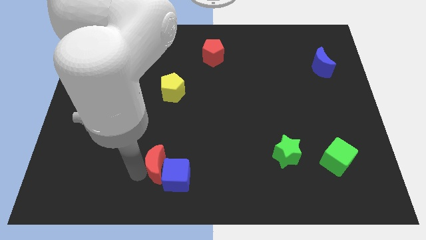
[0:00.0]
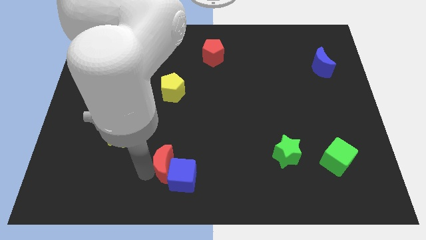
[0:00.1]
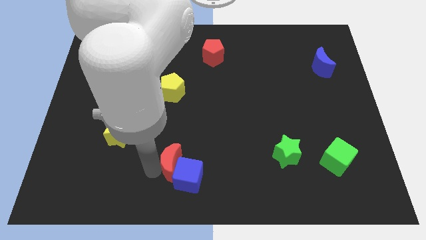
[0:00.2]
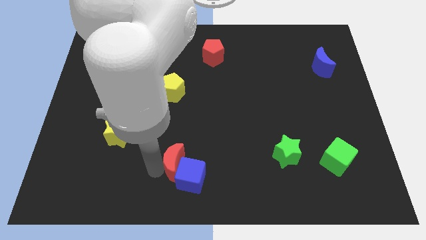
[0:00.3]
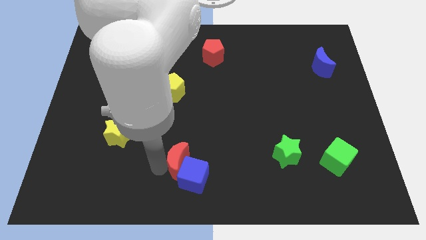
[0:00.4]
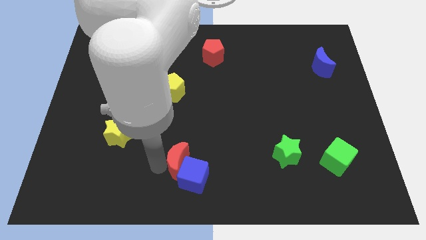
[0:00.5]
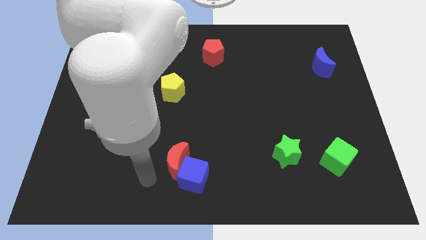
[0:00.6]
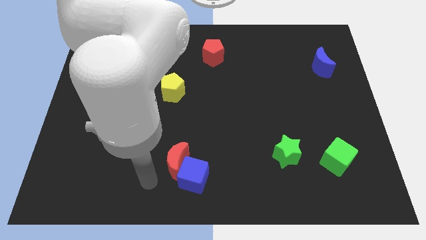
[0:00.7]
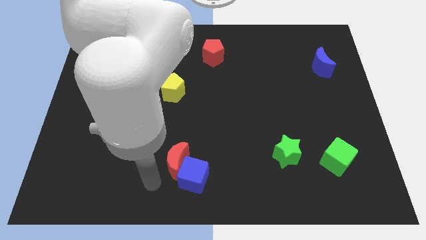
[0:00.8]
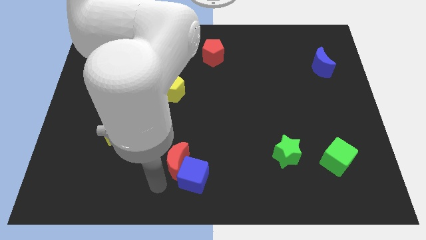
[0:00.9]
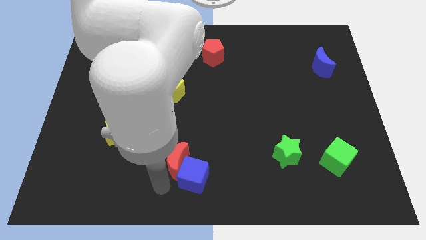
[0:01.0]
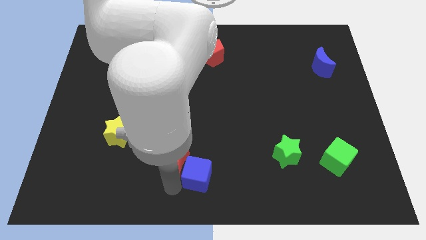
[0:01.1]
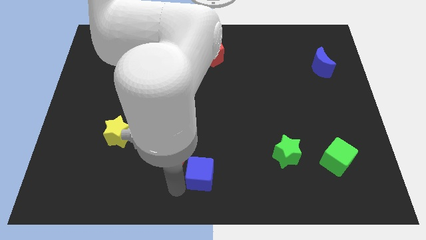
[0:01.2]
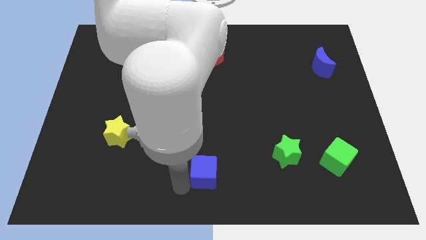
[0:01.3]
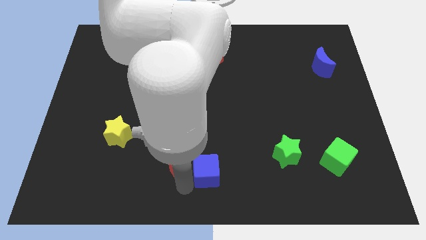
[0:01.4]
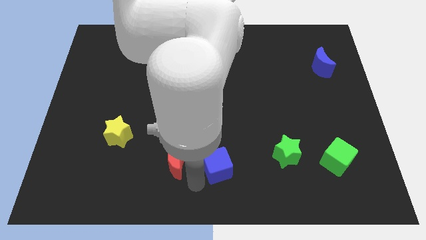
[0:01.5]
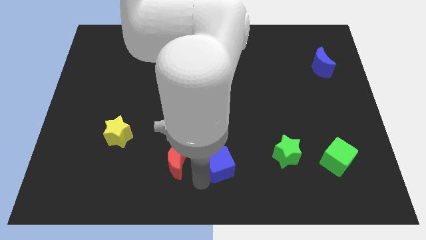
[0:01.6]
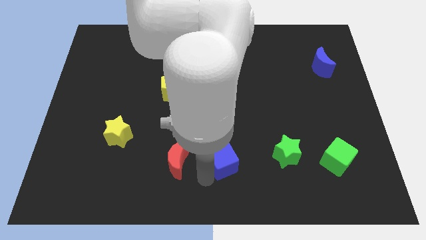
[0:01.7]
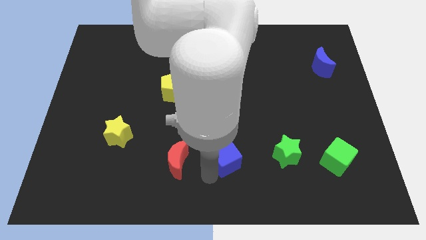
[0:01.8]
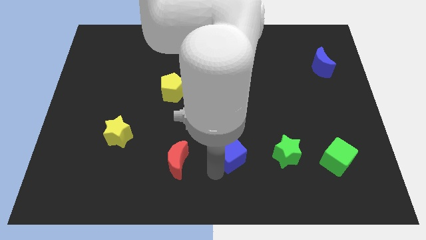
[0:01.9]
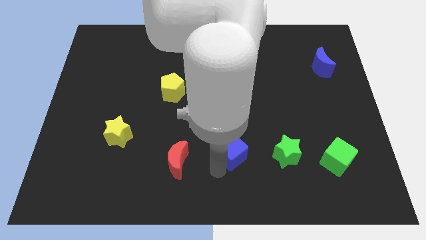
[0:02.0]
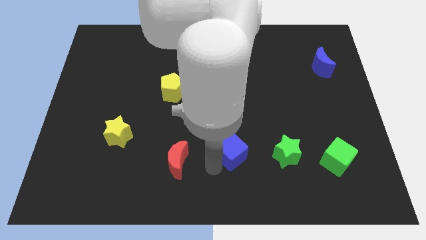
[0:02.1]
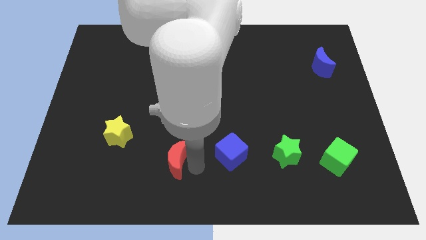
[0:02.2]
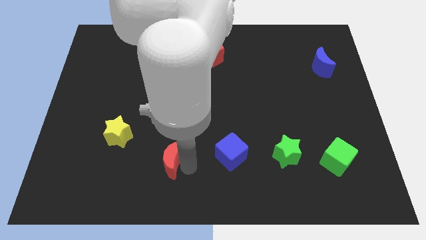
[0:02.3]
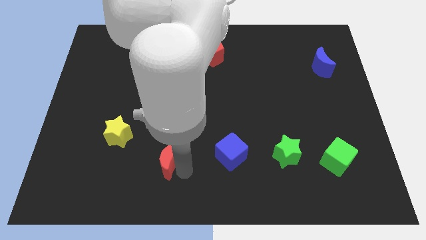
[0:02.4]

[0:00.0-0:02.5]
place the blue cube to the left of the green star

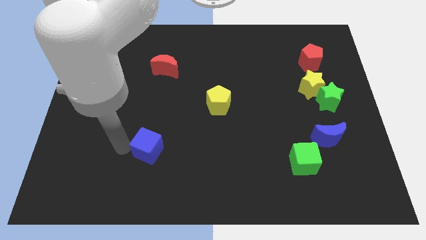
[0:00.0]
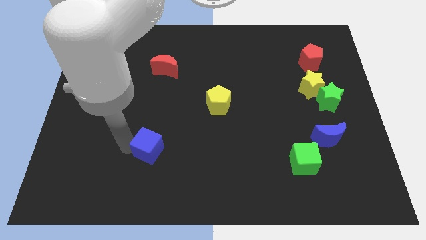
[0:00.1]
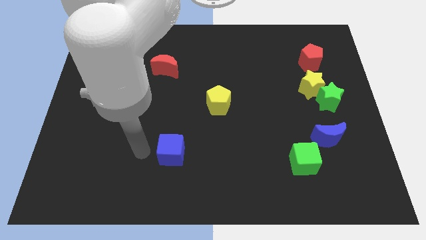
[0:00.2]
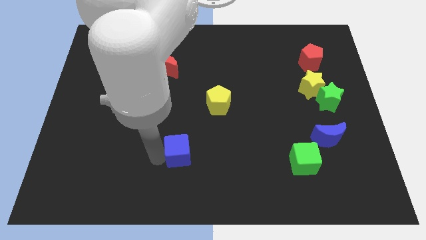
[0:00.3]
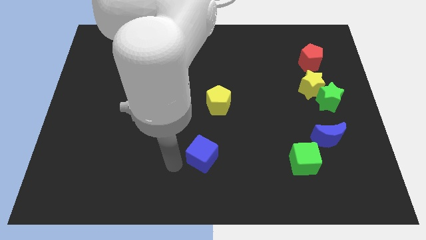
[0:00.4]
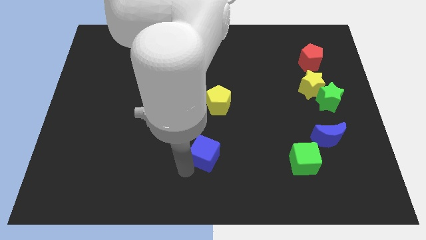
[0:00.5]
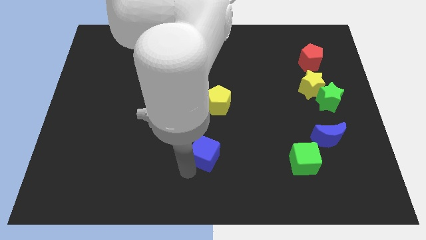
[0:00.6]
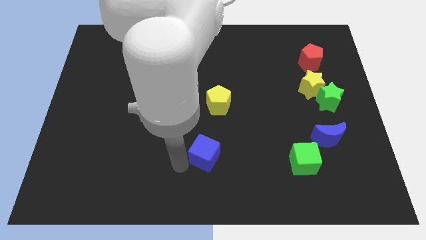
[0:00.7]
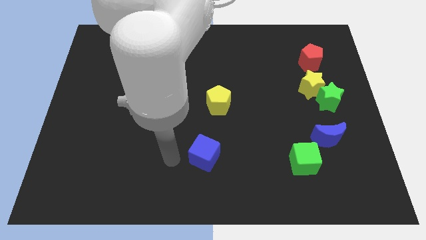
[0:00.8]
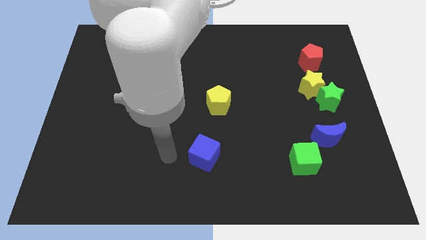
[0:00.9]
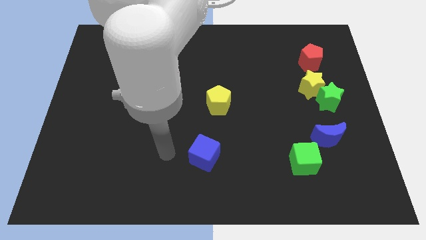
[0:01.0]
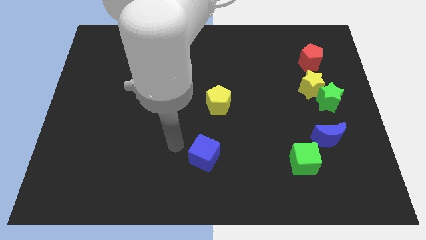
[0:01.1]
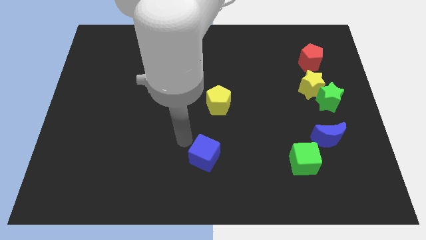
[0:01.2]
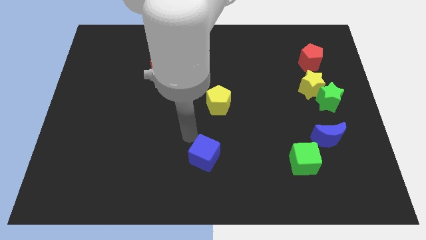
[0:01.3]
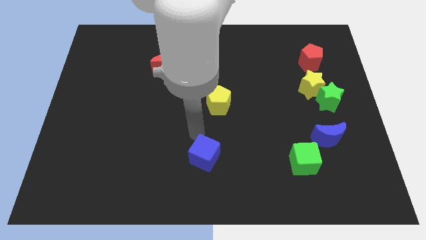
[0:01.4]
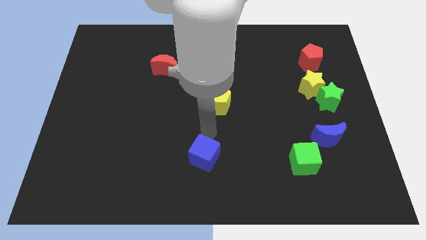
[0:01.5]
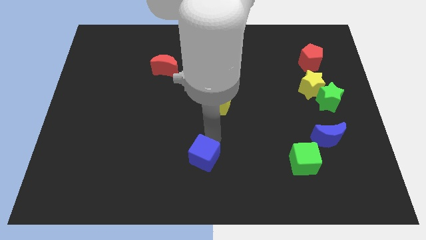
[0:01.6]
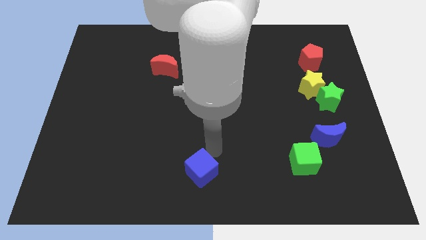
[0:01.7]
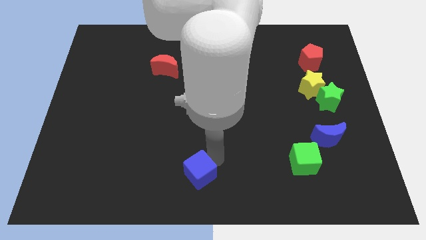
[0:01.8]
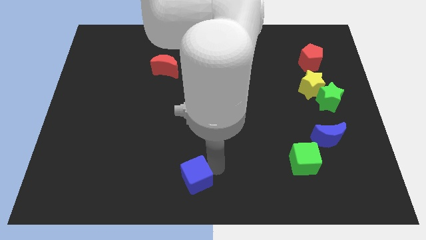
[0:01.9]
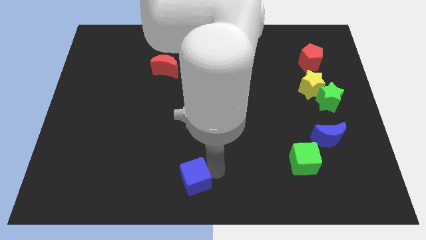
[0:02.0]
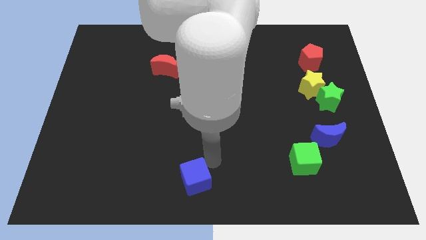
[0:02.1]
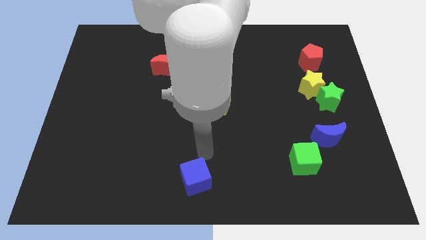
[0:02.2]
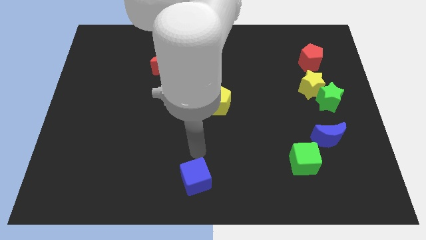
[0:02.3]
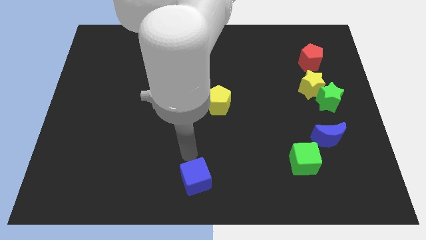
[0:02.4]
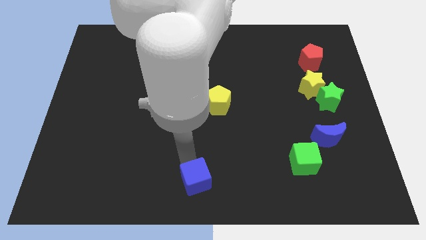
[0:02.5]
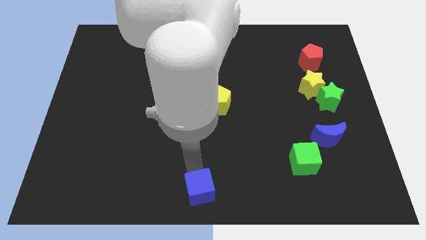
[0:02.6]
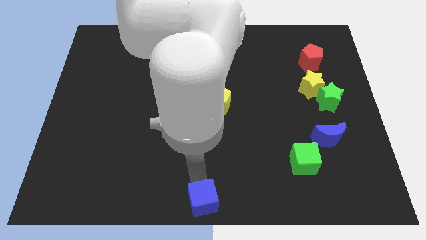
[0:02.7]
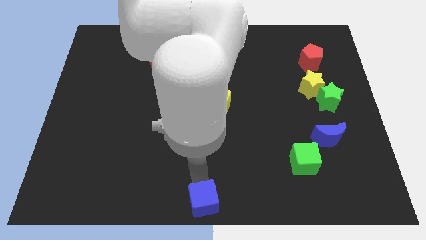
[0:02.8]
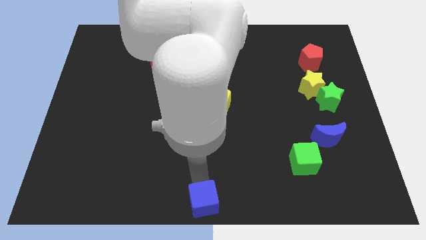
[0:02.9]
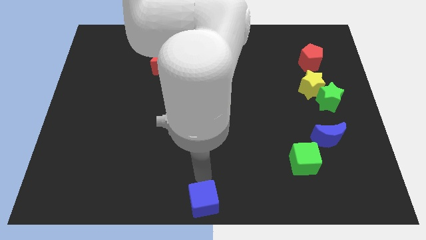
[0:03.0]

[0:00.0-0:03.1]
place blue cube at the bottom center of the board

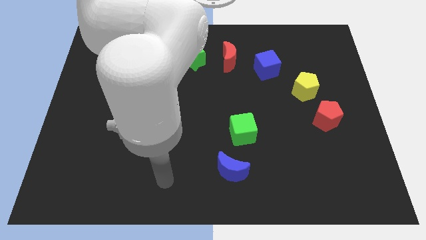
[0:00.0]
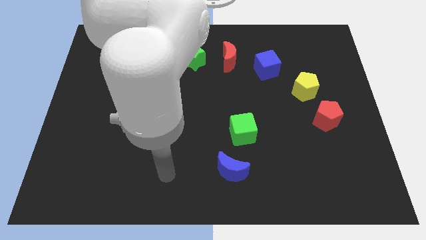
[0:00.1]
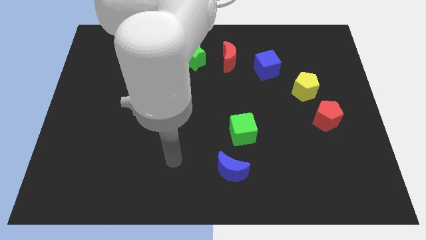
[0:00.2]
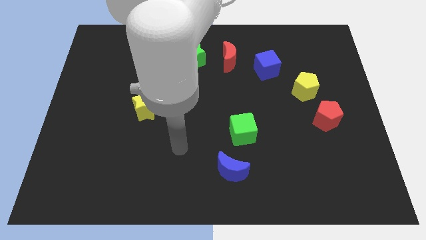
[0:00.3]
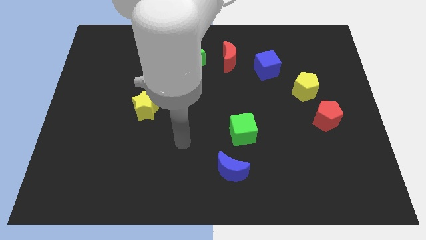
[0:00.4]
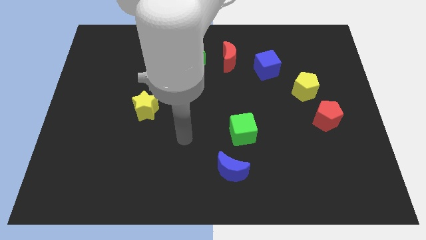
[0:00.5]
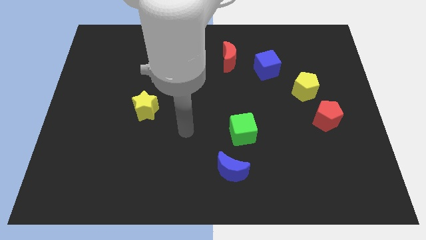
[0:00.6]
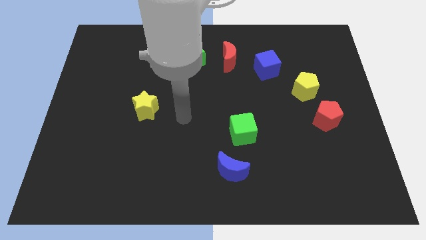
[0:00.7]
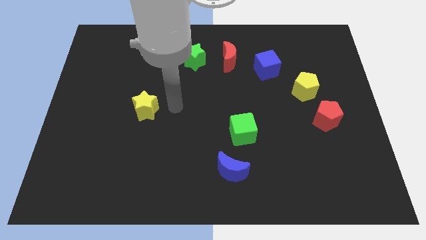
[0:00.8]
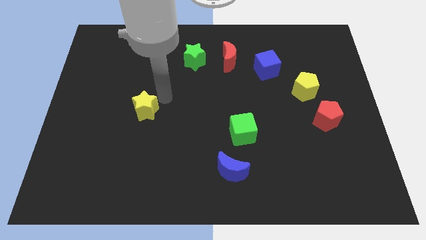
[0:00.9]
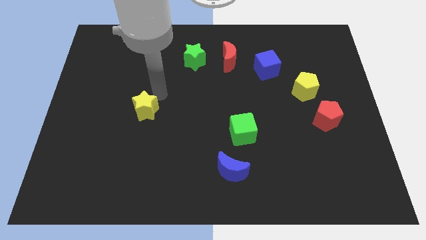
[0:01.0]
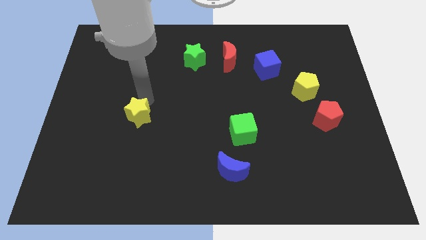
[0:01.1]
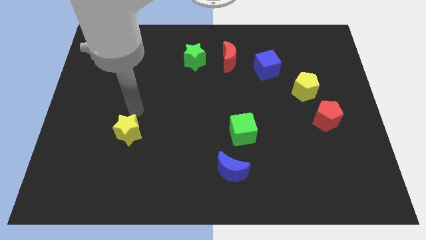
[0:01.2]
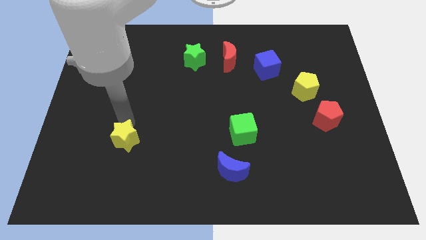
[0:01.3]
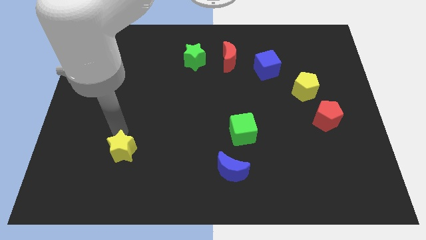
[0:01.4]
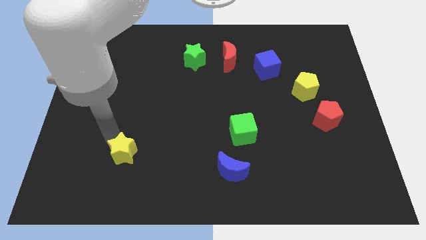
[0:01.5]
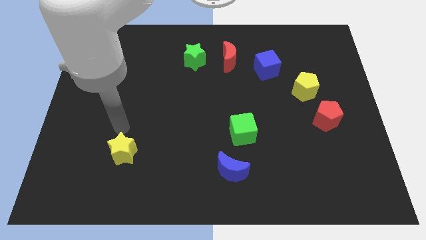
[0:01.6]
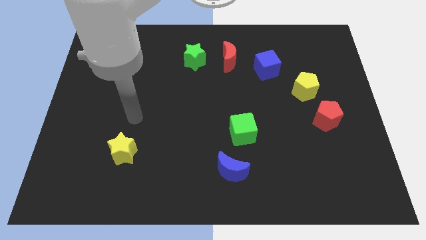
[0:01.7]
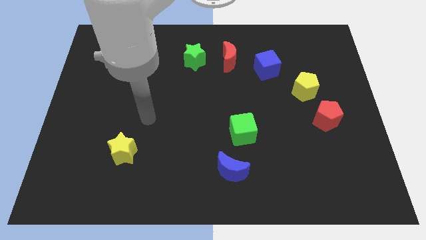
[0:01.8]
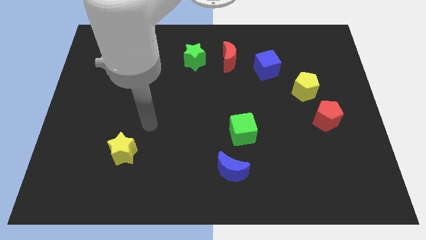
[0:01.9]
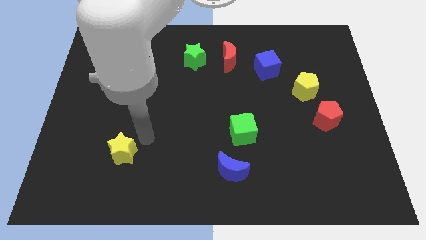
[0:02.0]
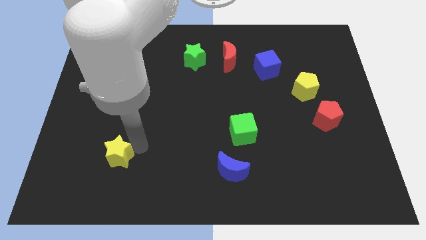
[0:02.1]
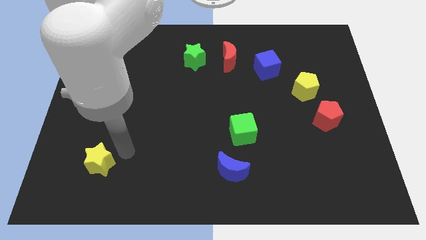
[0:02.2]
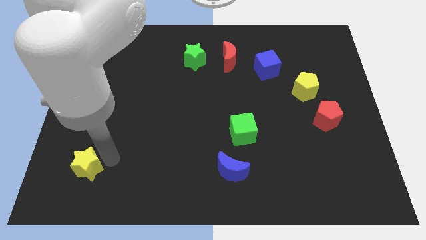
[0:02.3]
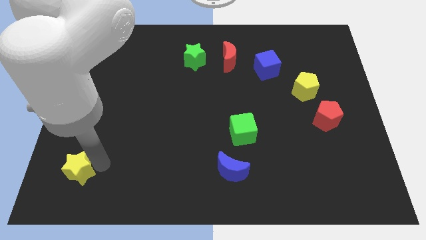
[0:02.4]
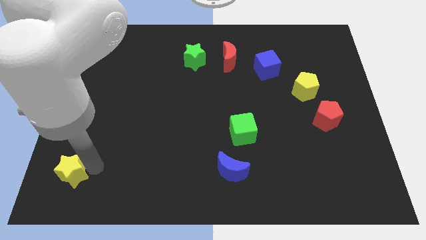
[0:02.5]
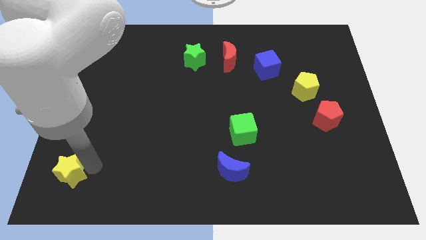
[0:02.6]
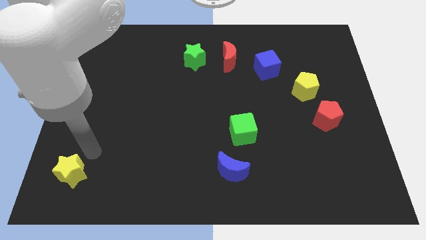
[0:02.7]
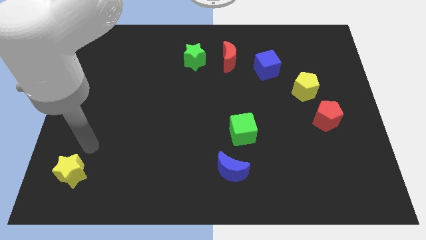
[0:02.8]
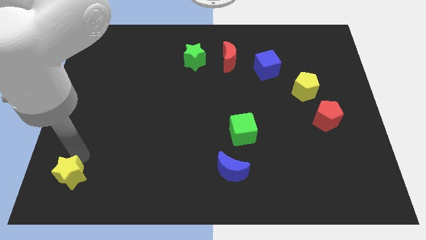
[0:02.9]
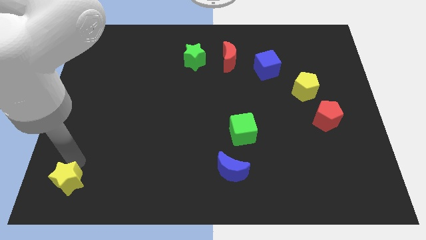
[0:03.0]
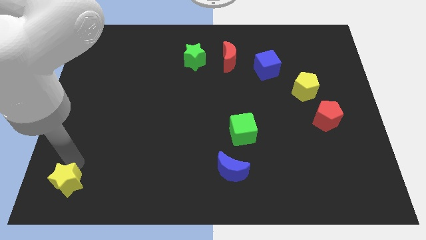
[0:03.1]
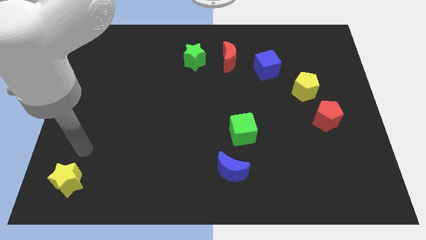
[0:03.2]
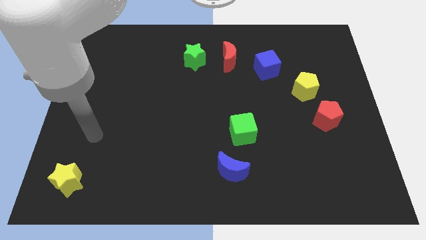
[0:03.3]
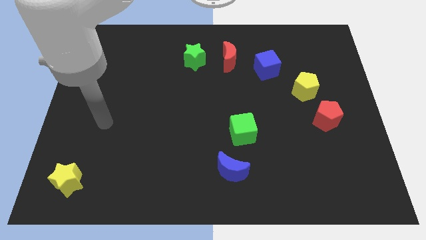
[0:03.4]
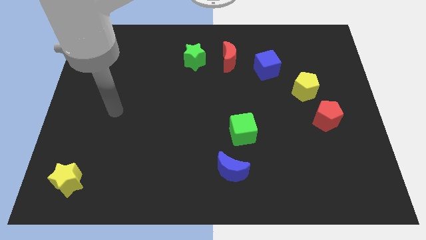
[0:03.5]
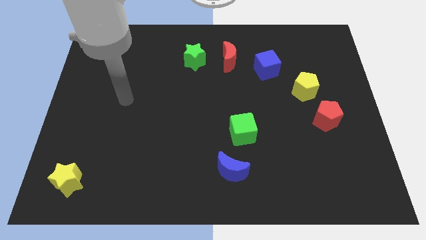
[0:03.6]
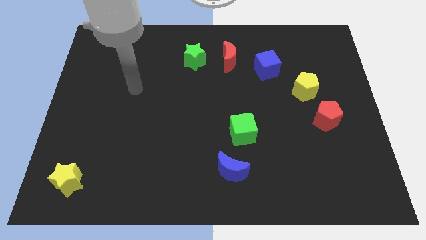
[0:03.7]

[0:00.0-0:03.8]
move yellow star to the bottom left corner of the board
